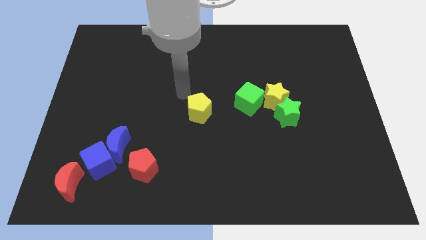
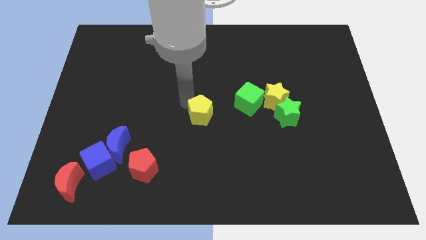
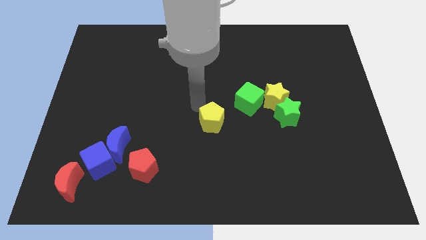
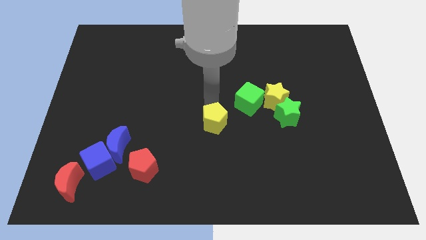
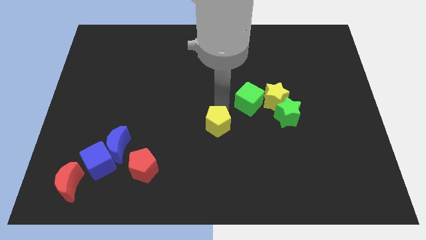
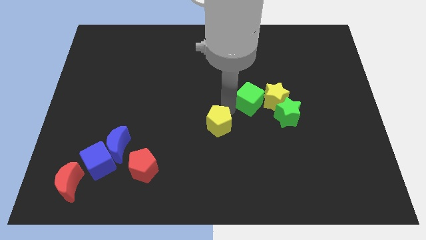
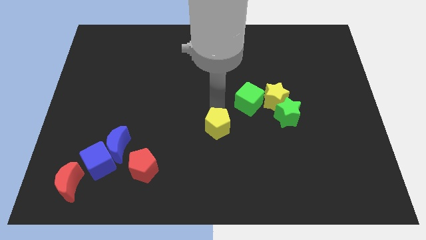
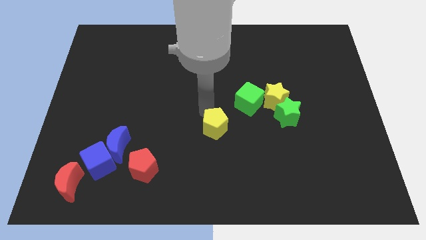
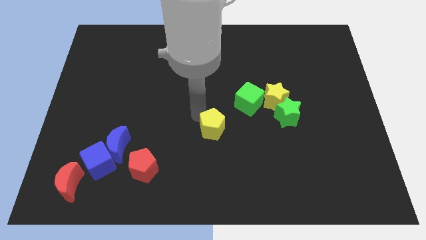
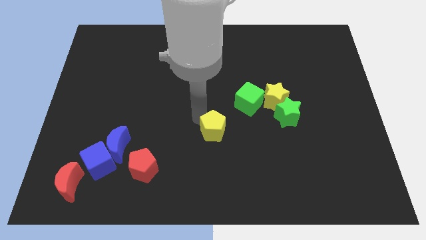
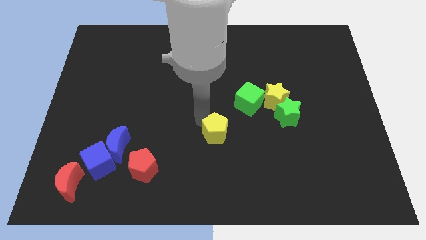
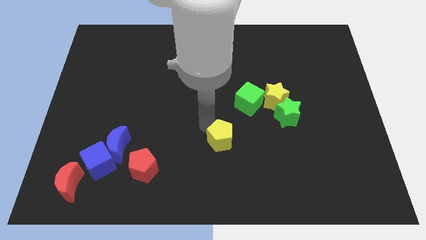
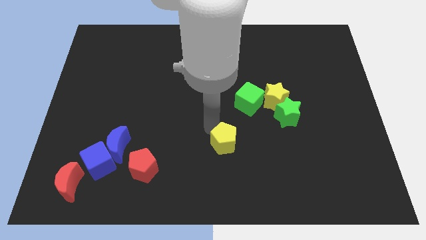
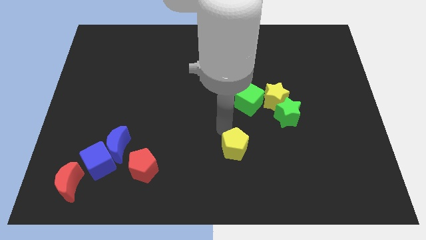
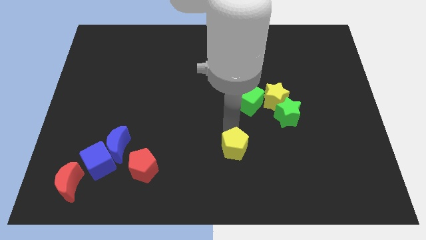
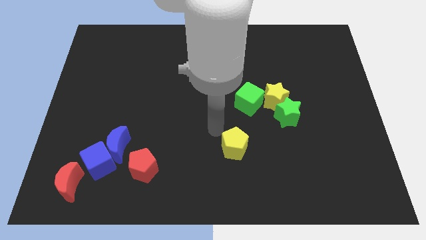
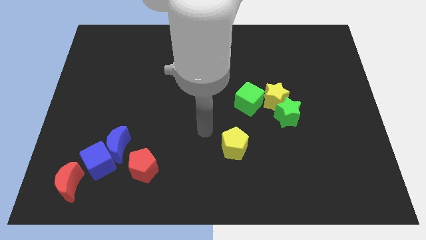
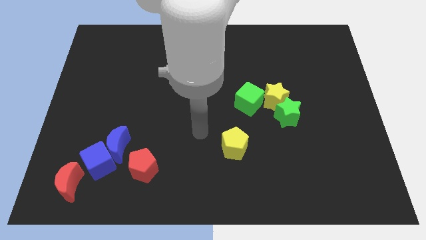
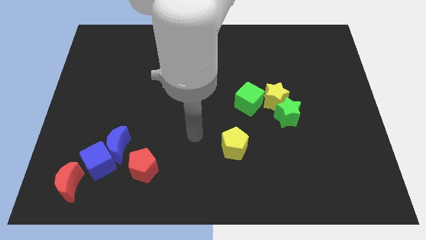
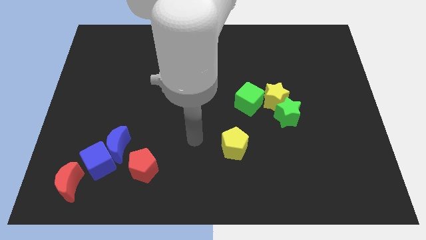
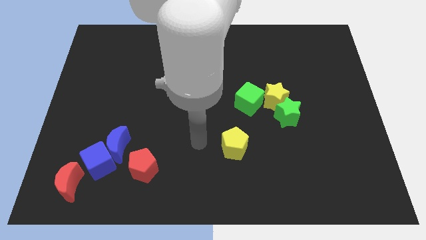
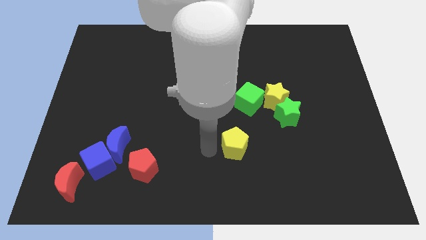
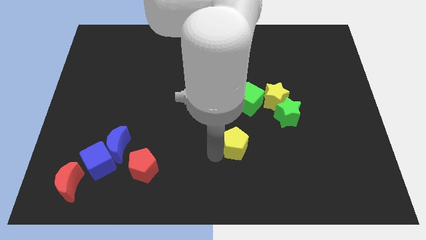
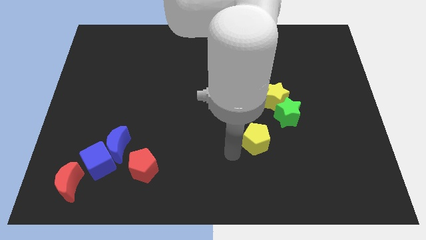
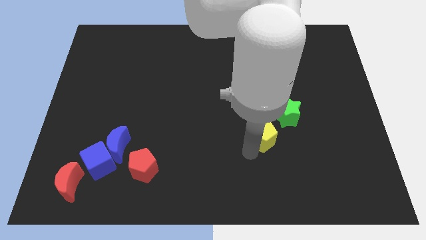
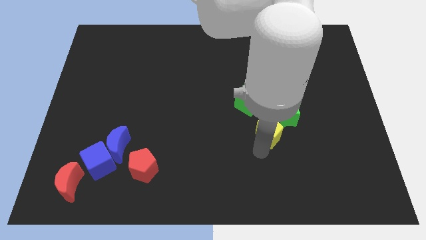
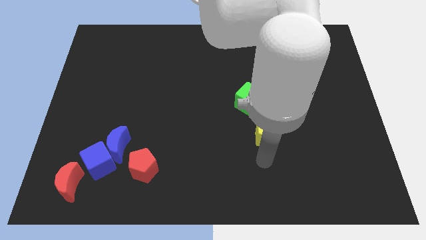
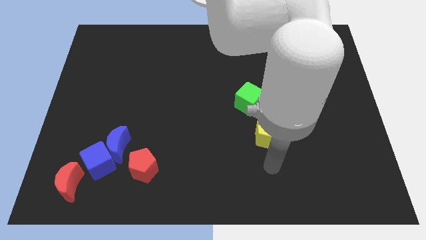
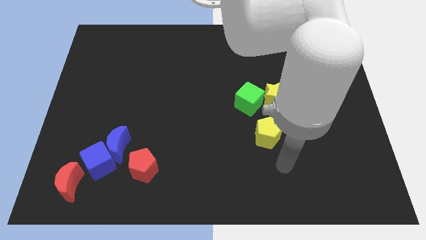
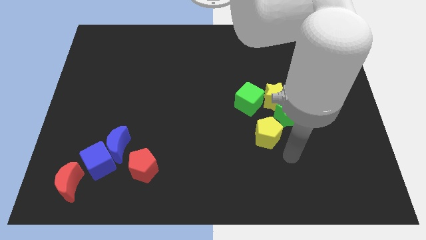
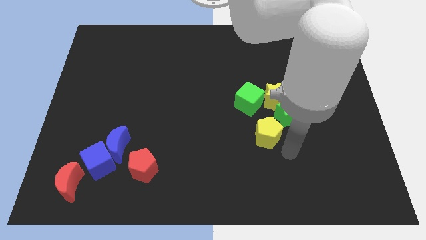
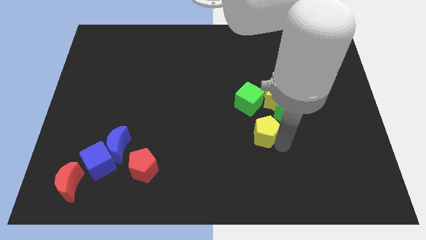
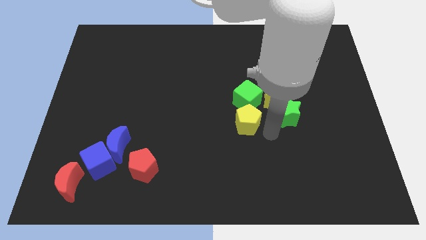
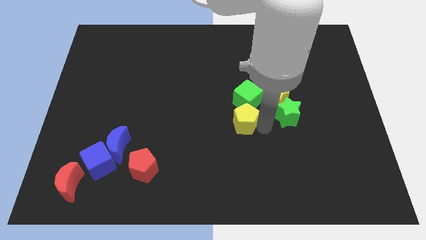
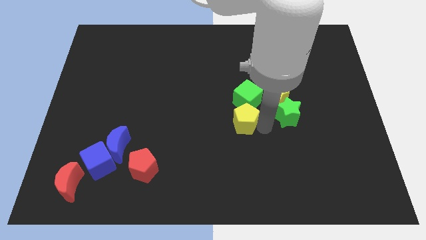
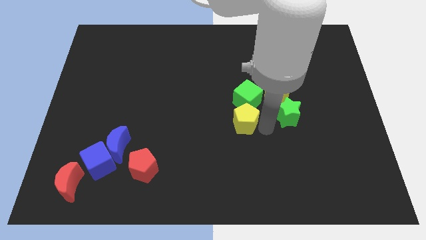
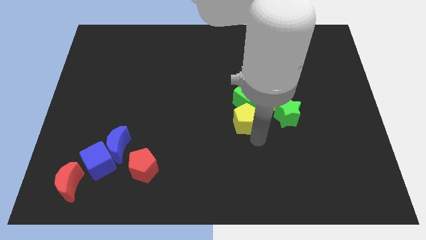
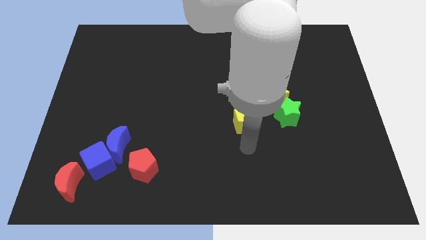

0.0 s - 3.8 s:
place the yellow pentagon at the bottom of the green cube

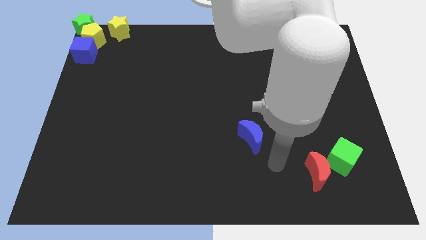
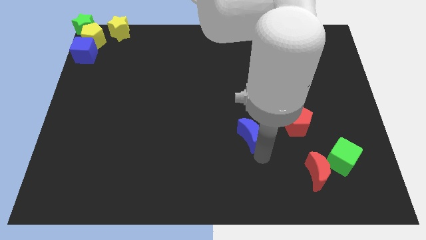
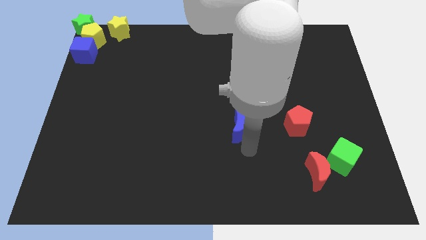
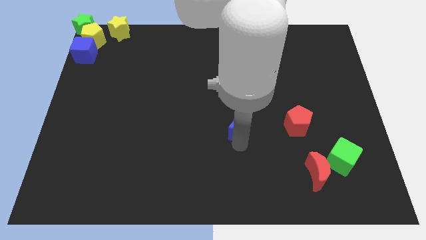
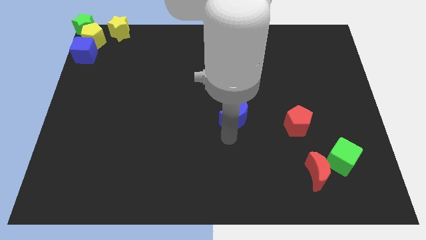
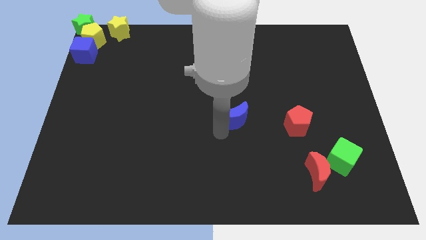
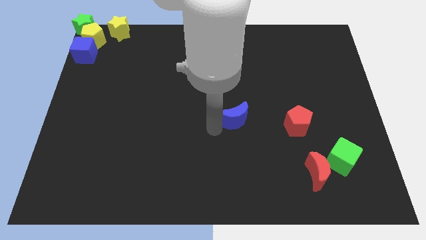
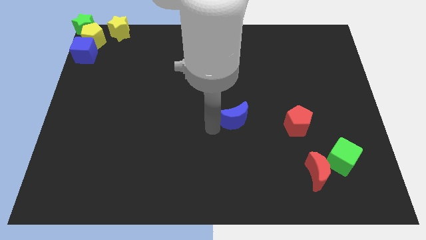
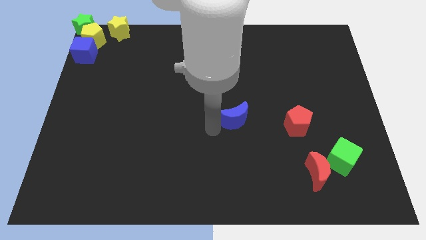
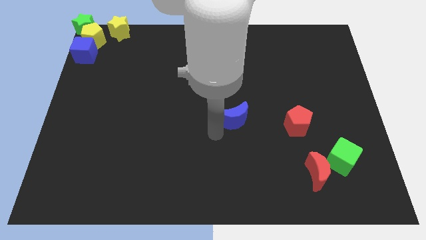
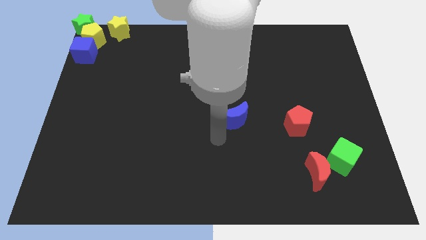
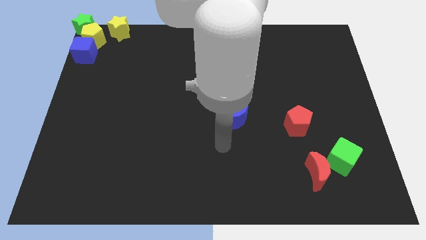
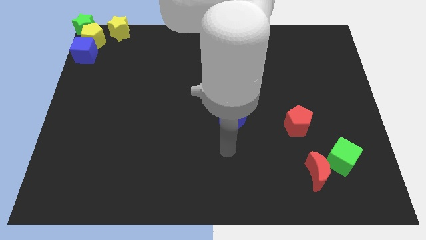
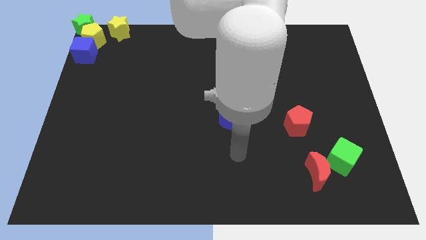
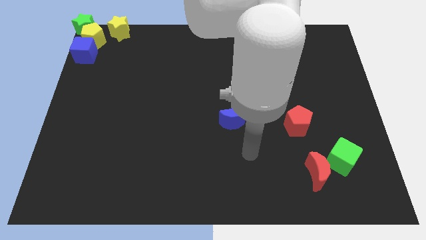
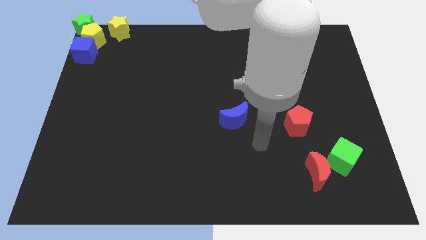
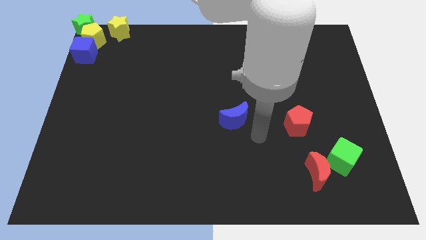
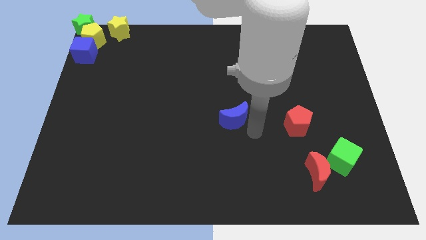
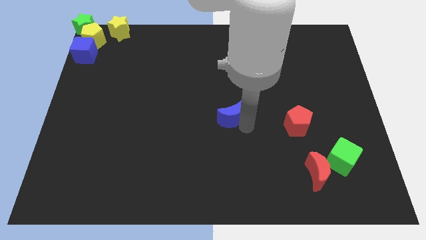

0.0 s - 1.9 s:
place the blue moon to the left side of the red pentagon

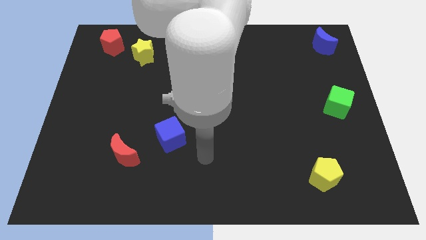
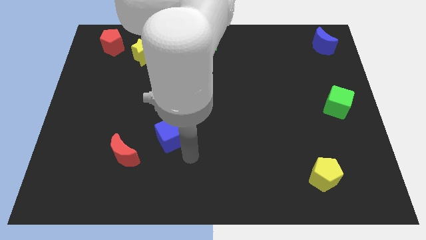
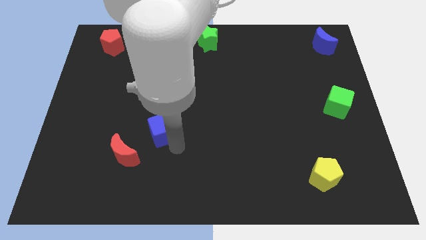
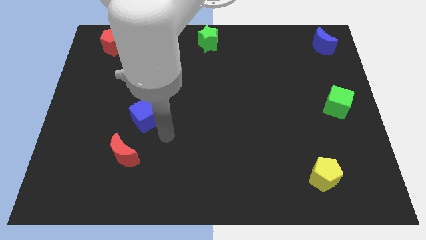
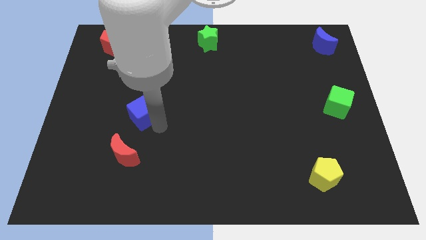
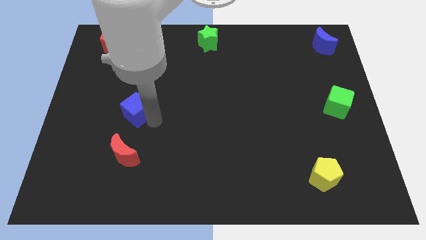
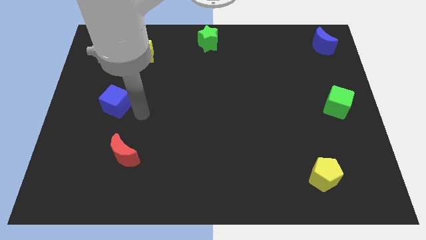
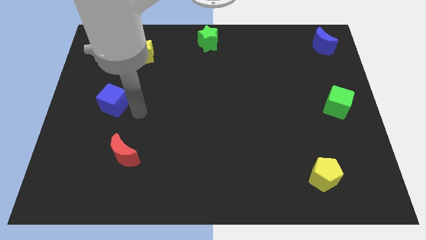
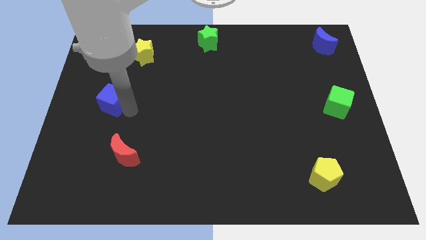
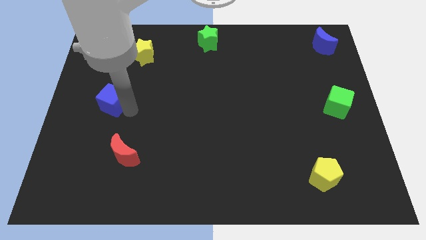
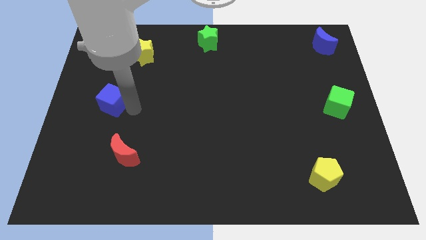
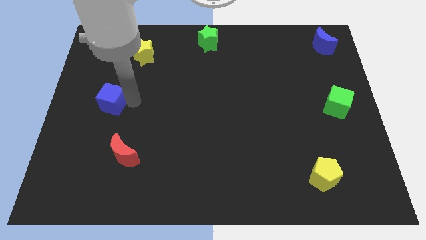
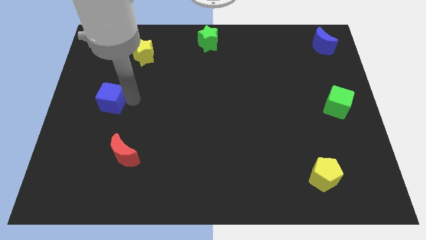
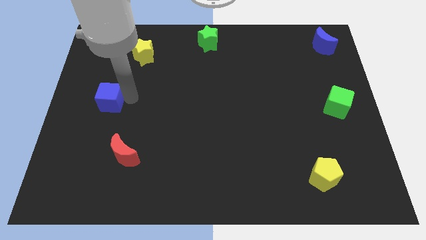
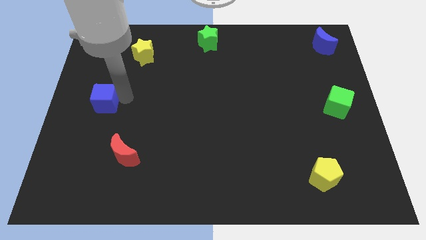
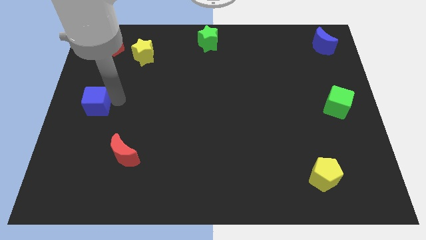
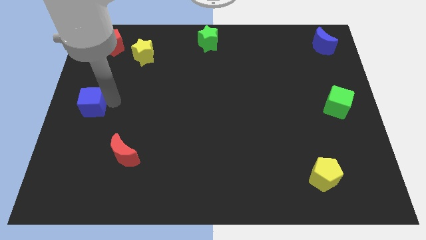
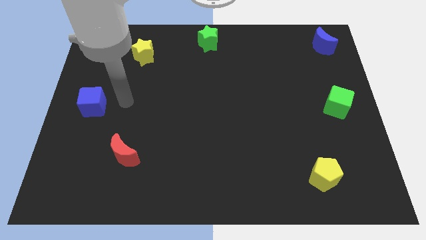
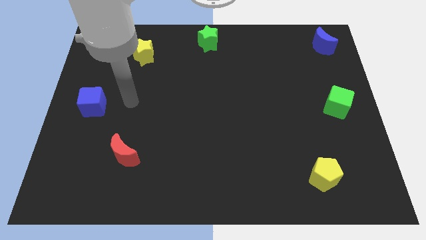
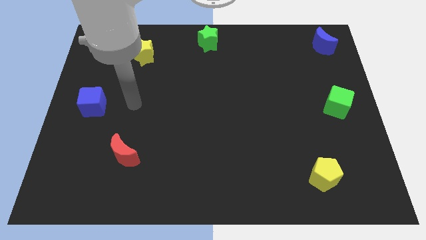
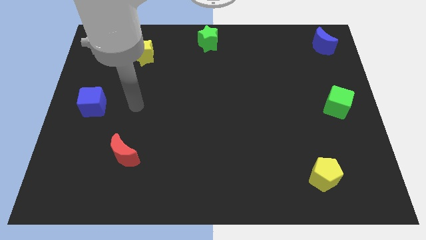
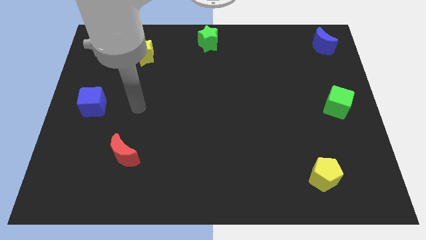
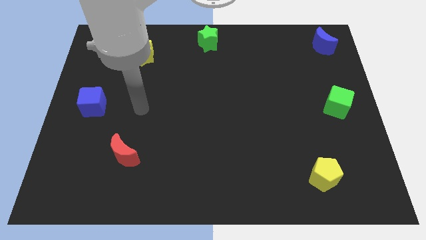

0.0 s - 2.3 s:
move the blue cube to the center left of the board

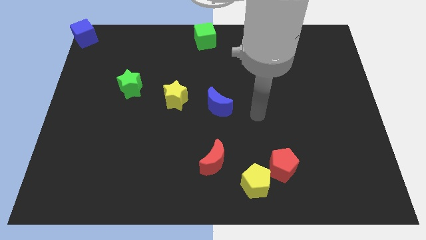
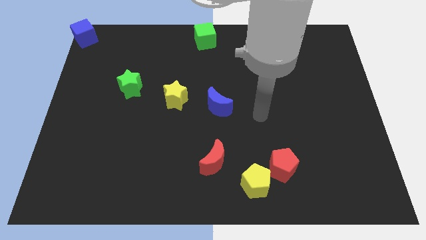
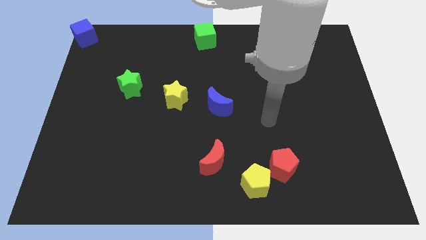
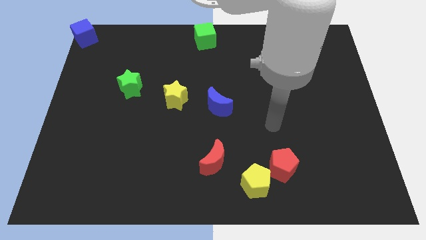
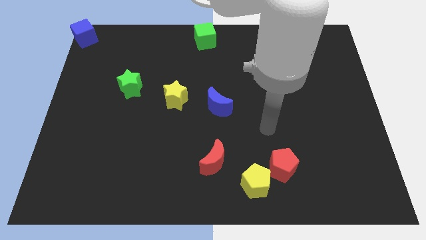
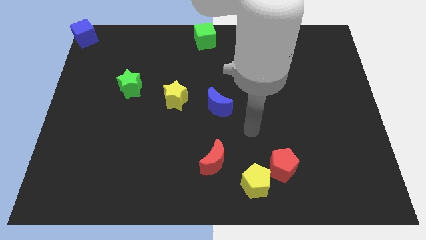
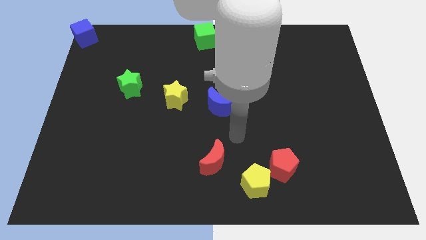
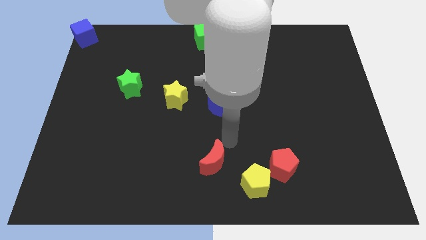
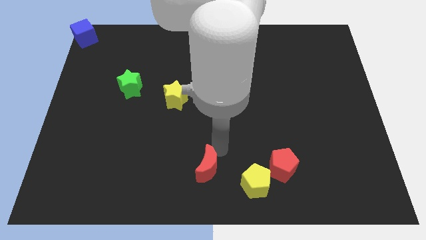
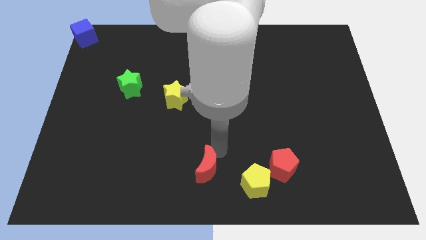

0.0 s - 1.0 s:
push the red moon slightly towards the bottom
